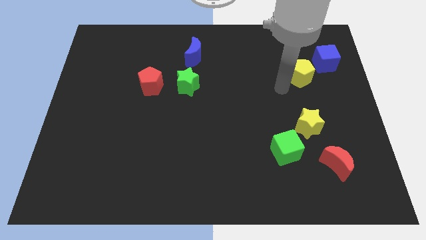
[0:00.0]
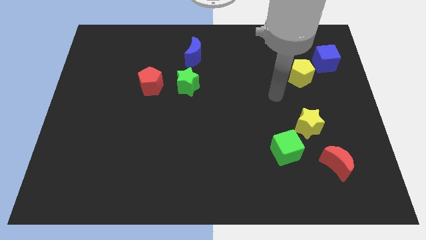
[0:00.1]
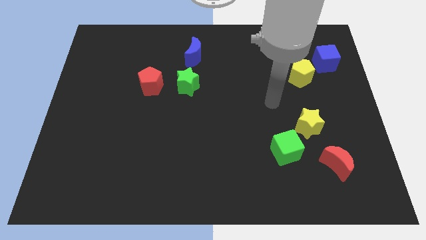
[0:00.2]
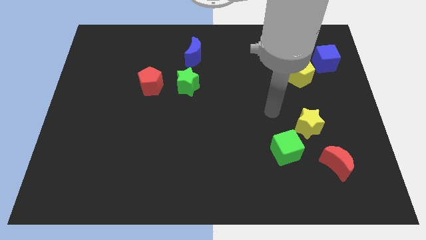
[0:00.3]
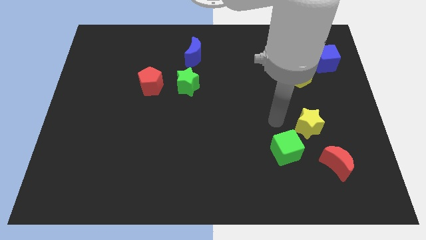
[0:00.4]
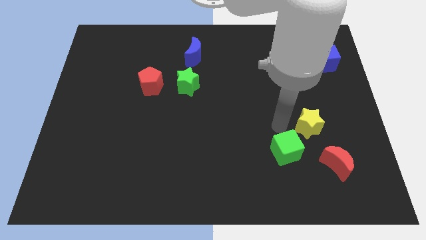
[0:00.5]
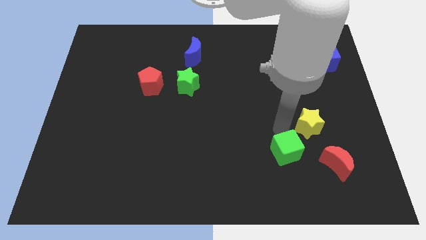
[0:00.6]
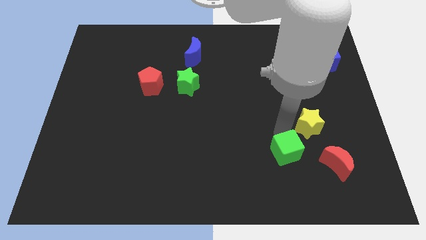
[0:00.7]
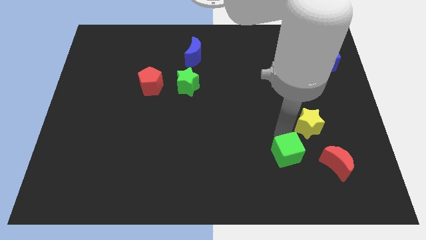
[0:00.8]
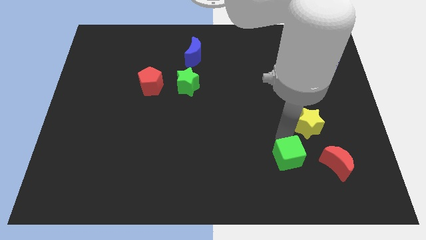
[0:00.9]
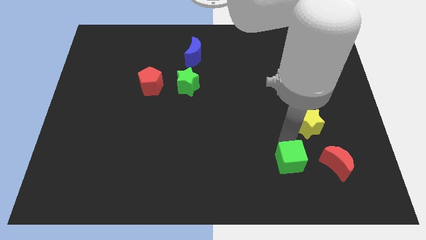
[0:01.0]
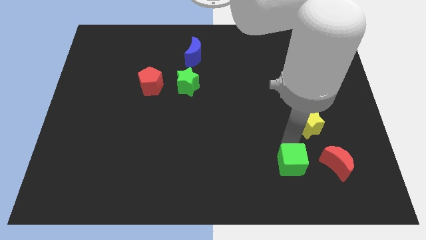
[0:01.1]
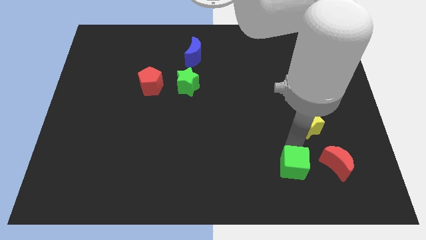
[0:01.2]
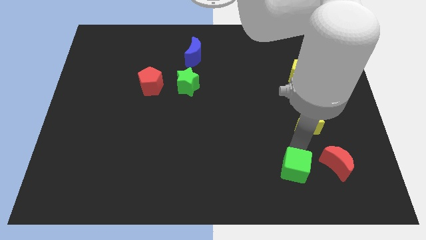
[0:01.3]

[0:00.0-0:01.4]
move the green cube left to the red crescent

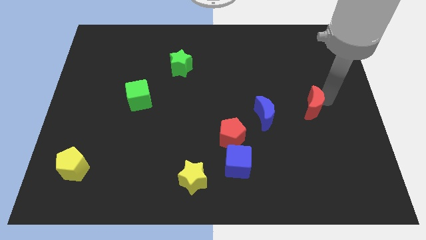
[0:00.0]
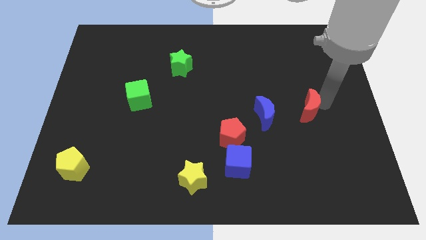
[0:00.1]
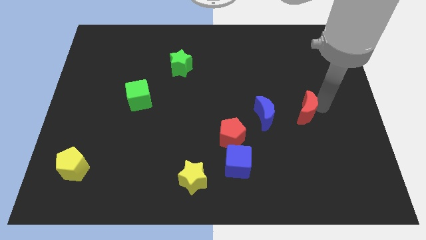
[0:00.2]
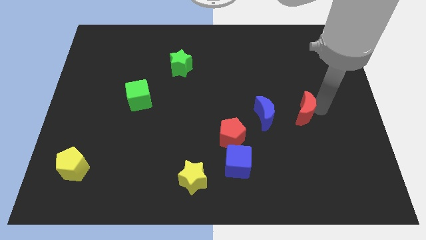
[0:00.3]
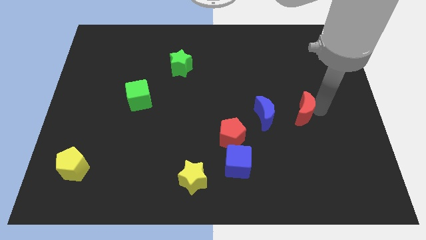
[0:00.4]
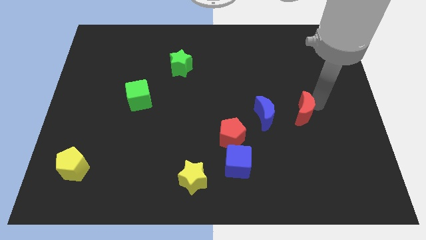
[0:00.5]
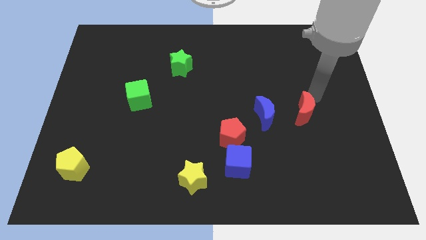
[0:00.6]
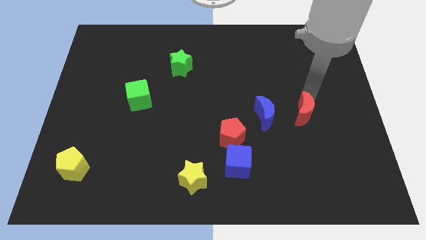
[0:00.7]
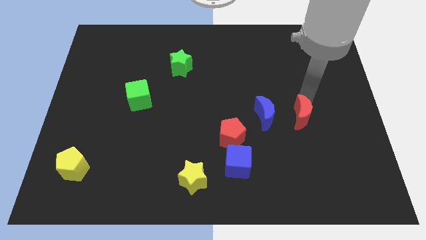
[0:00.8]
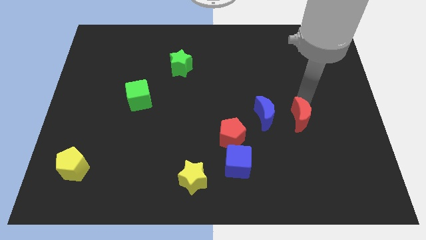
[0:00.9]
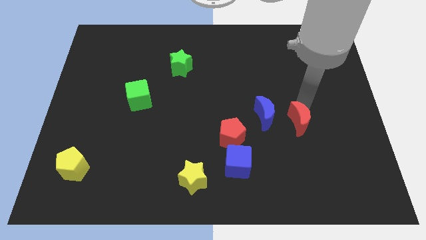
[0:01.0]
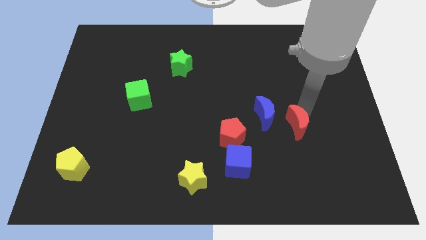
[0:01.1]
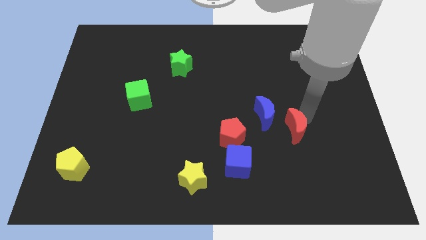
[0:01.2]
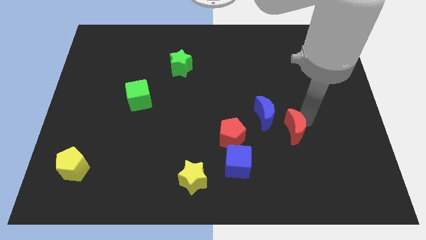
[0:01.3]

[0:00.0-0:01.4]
push red crescent towards blue moon

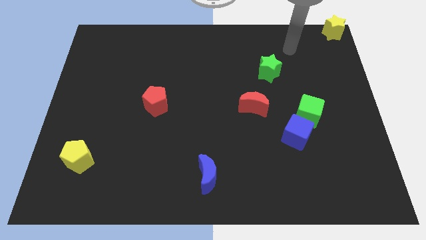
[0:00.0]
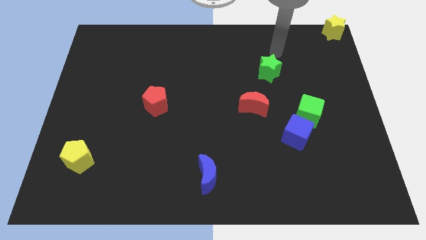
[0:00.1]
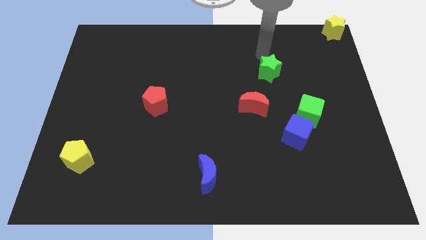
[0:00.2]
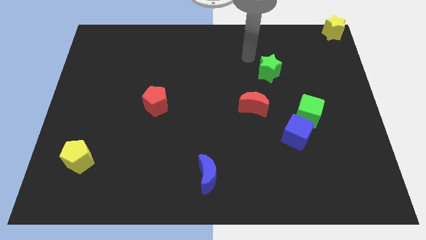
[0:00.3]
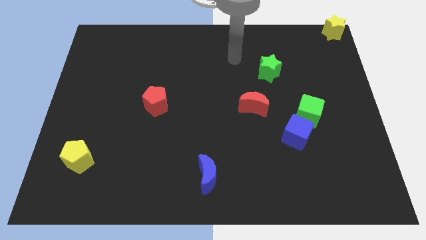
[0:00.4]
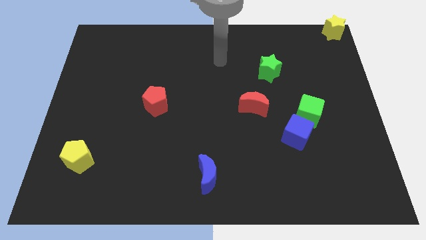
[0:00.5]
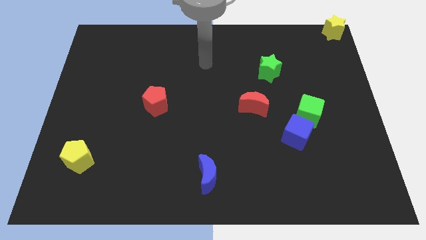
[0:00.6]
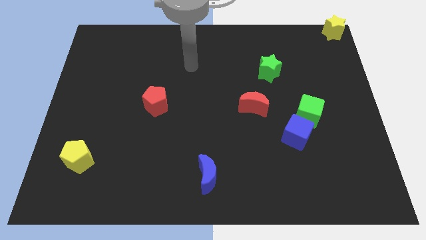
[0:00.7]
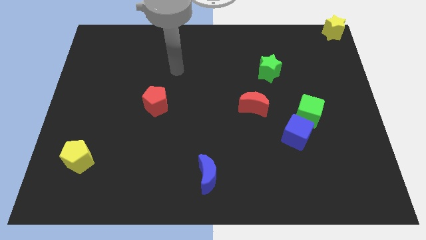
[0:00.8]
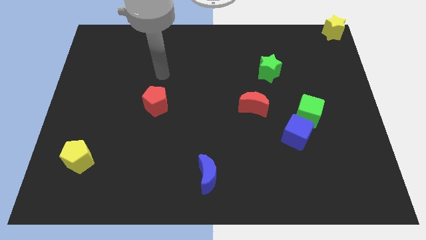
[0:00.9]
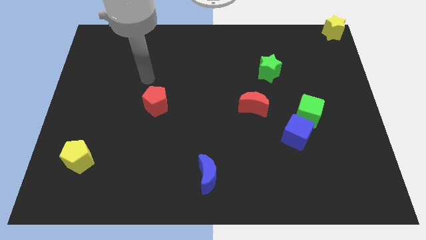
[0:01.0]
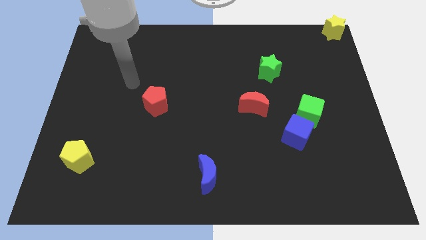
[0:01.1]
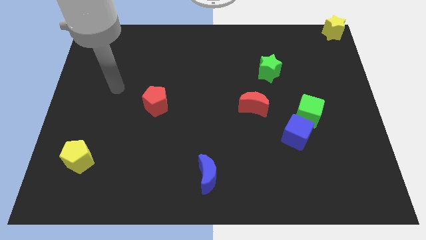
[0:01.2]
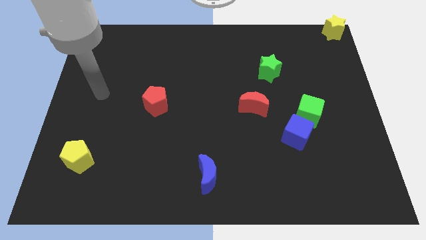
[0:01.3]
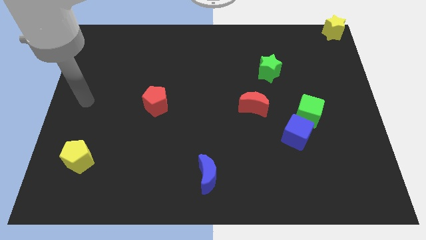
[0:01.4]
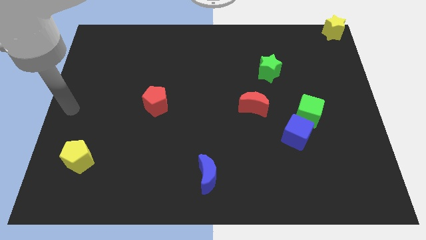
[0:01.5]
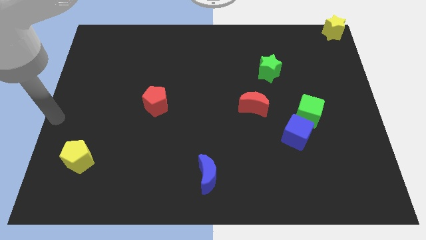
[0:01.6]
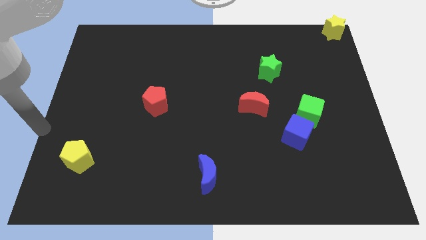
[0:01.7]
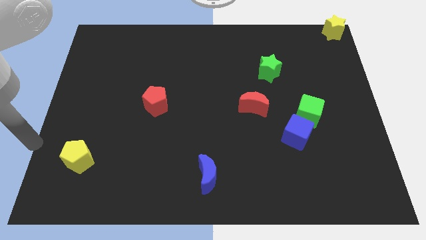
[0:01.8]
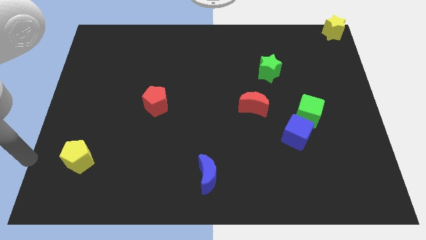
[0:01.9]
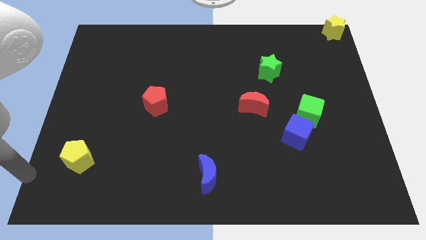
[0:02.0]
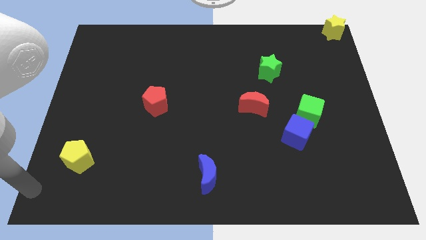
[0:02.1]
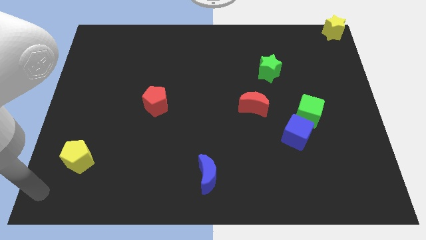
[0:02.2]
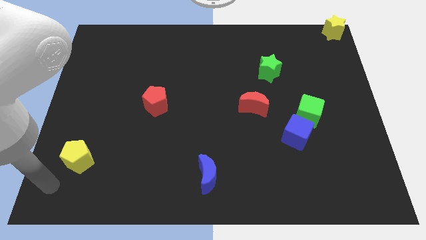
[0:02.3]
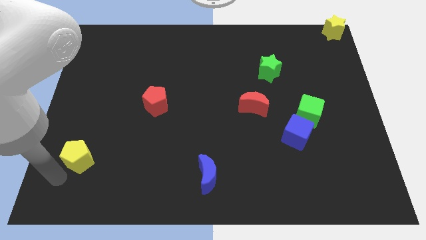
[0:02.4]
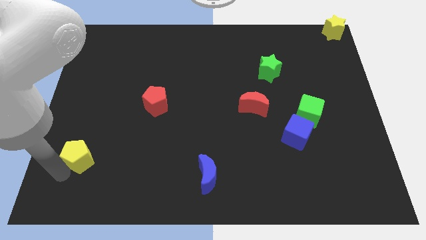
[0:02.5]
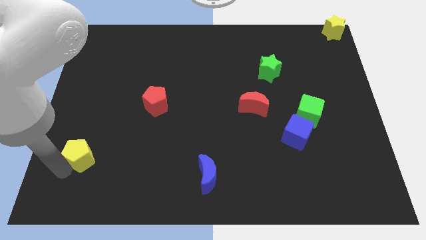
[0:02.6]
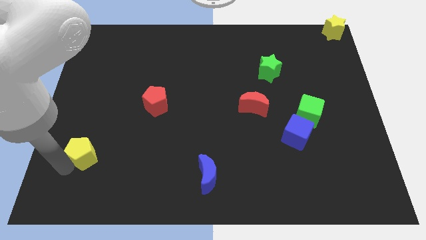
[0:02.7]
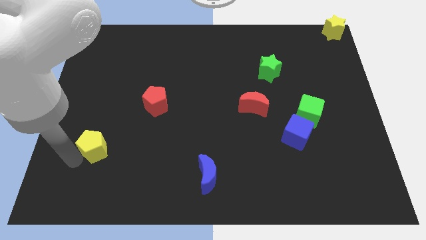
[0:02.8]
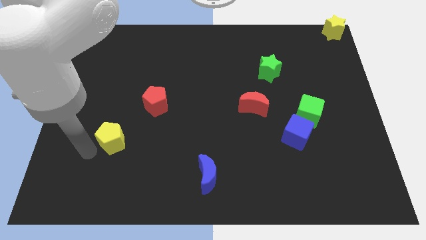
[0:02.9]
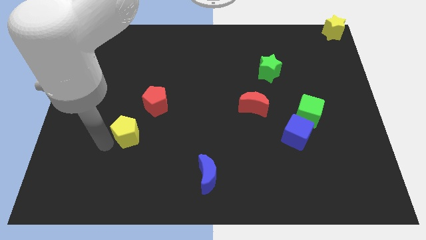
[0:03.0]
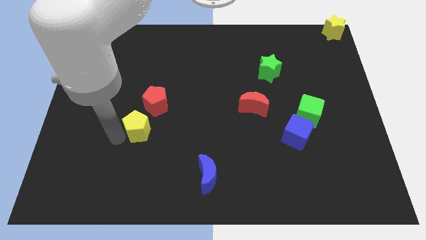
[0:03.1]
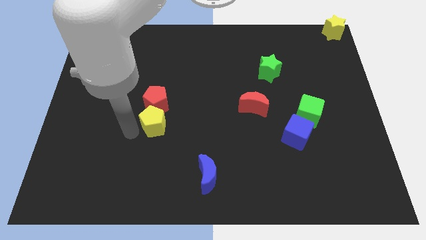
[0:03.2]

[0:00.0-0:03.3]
push yellow pentagon to the bottom of the red pentagon

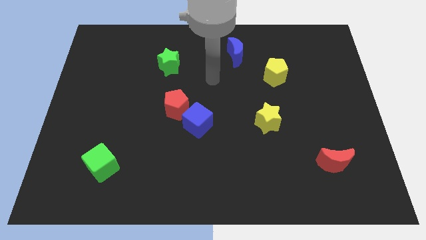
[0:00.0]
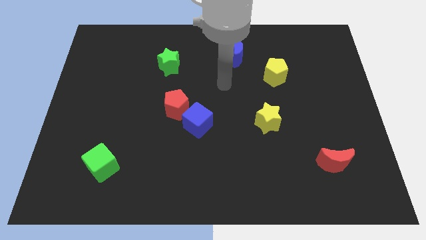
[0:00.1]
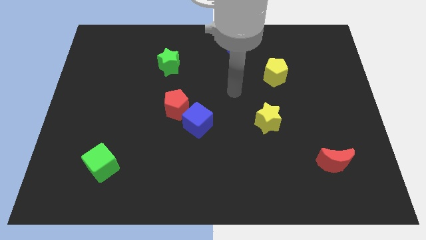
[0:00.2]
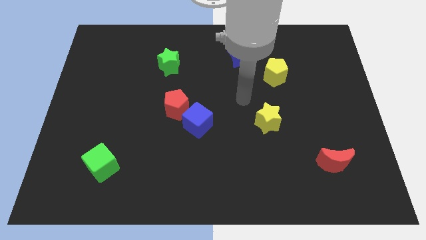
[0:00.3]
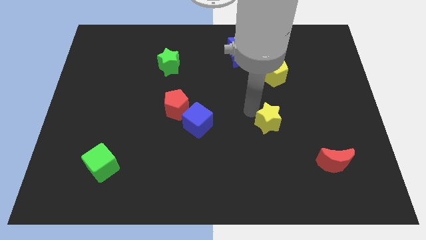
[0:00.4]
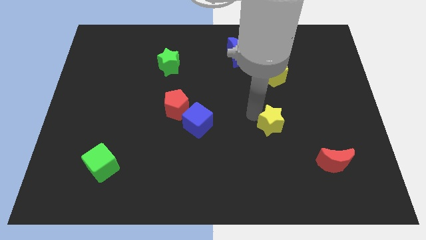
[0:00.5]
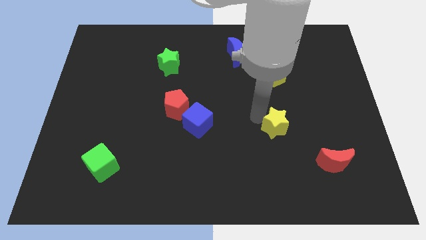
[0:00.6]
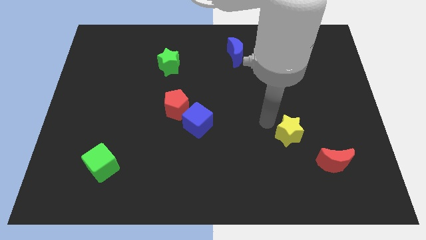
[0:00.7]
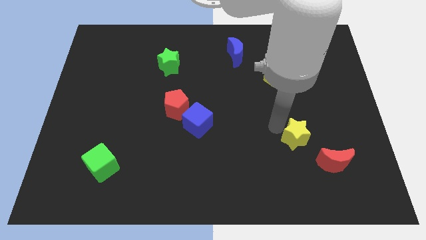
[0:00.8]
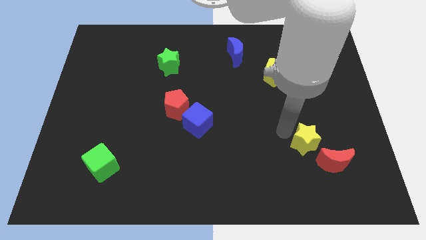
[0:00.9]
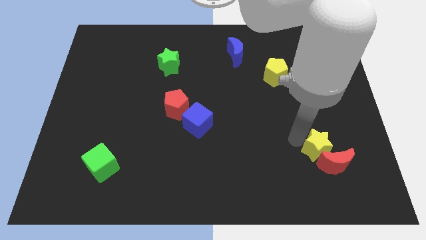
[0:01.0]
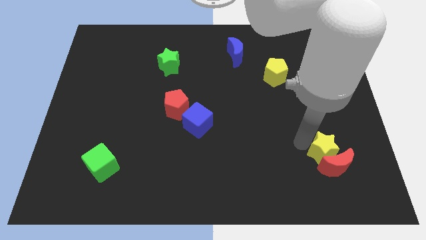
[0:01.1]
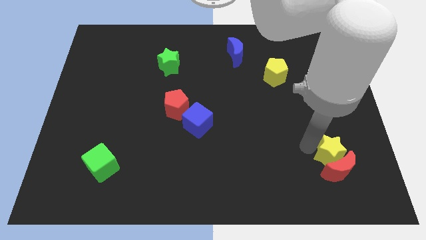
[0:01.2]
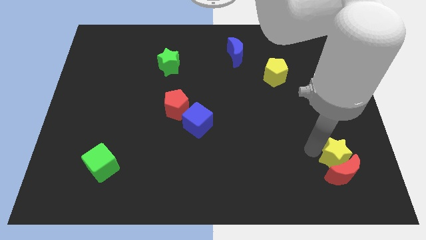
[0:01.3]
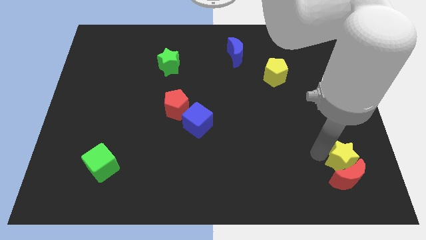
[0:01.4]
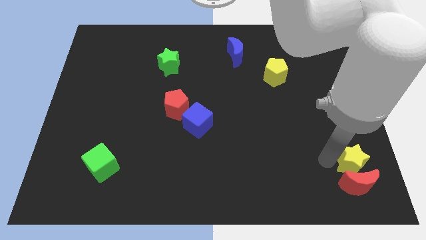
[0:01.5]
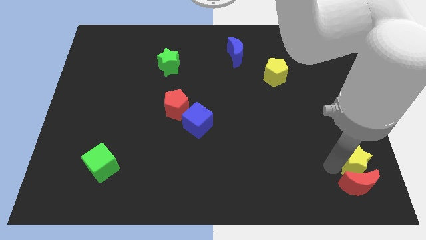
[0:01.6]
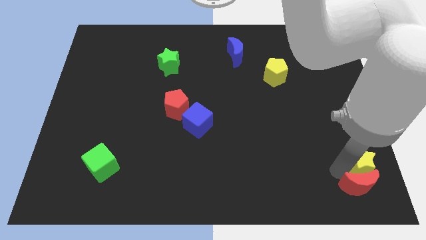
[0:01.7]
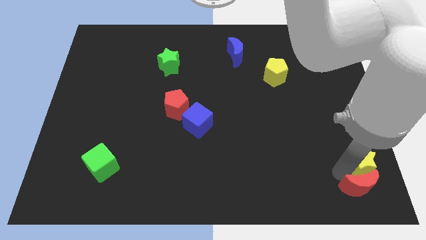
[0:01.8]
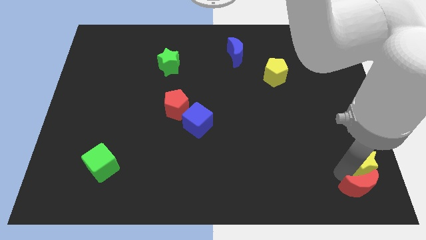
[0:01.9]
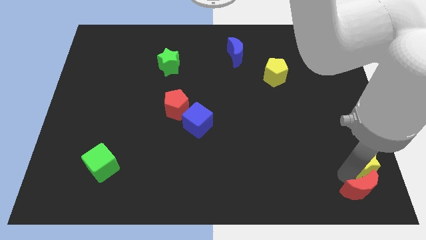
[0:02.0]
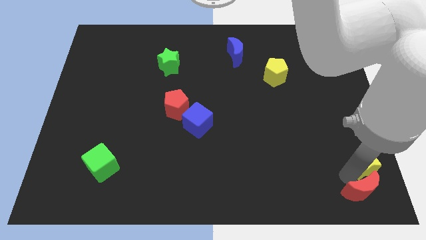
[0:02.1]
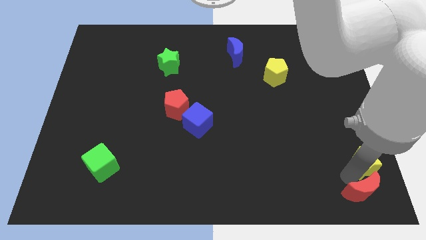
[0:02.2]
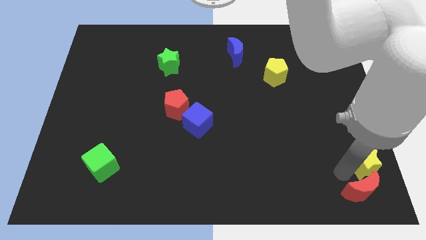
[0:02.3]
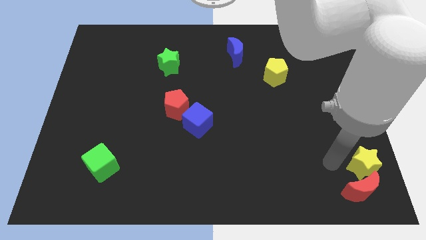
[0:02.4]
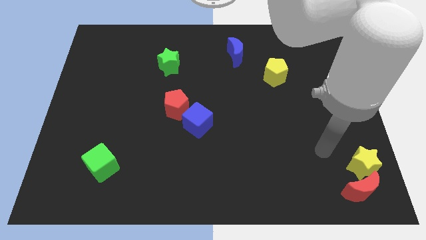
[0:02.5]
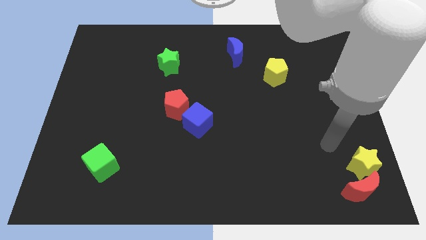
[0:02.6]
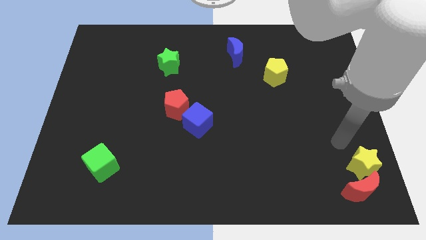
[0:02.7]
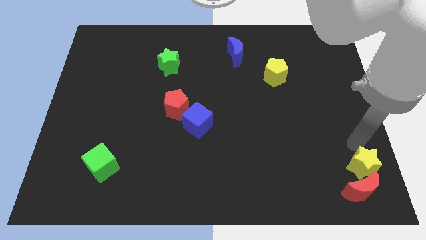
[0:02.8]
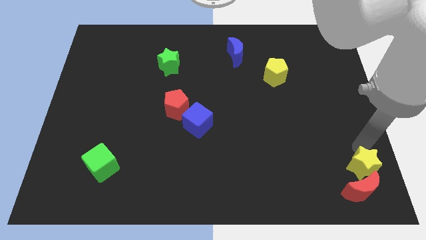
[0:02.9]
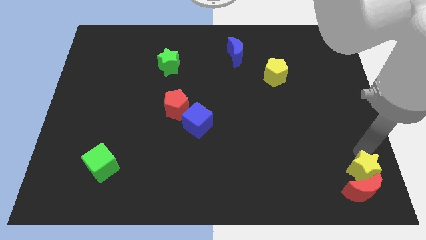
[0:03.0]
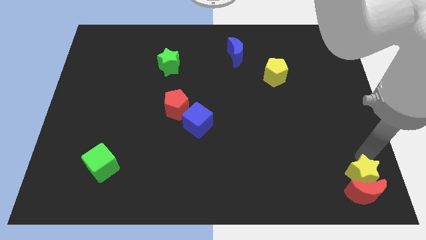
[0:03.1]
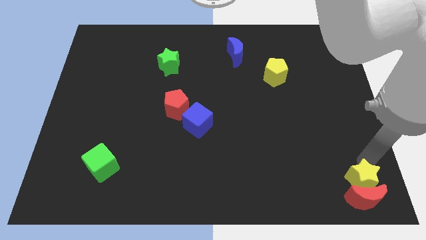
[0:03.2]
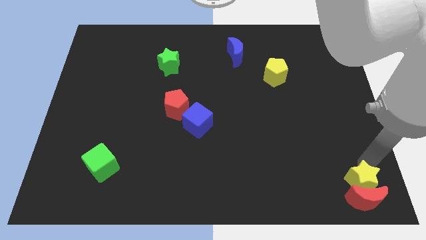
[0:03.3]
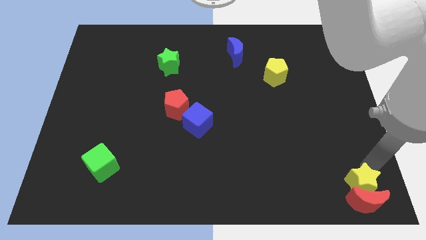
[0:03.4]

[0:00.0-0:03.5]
move the yellow star towards the top of the red moon
